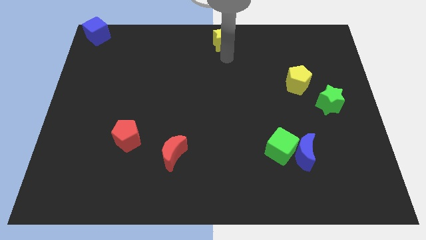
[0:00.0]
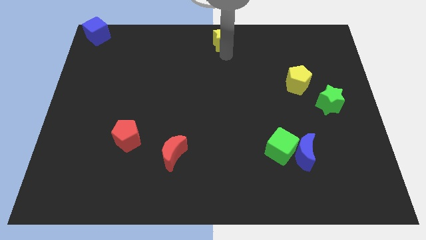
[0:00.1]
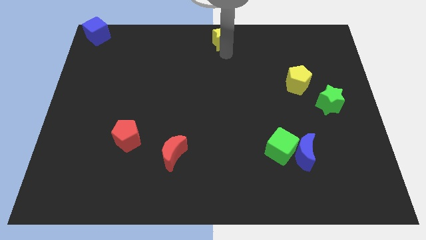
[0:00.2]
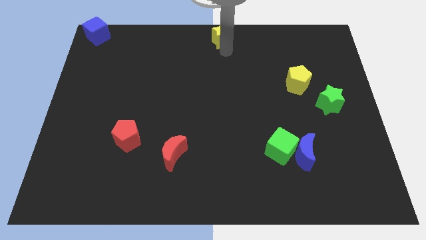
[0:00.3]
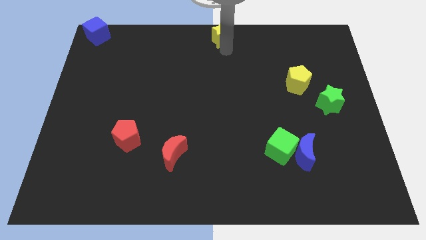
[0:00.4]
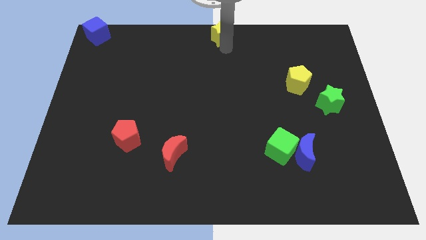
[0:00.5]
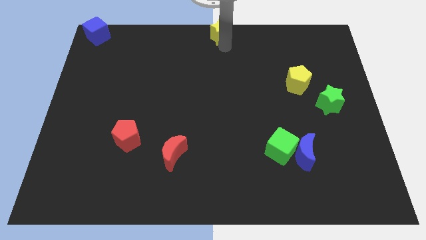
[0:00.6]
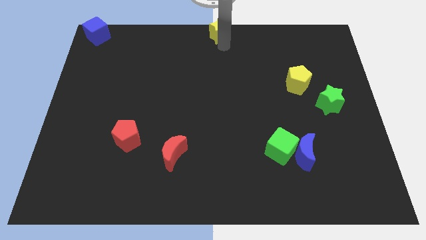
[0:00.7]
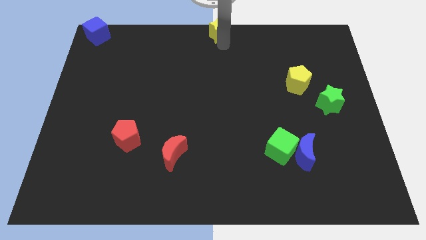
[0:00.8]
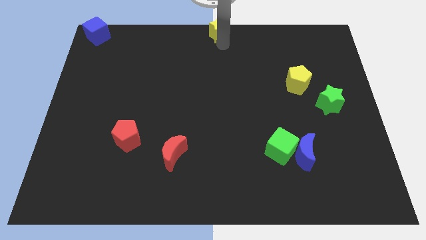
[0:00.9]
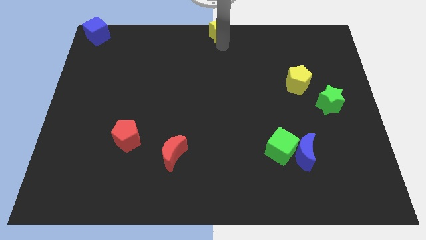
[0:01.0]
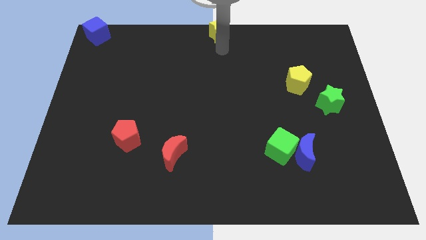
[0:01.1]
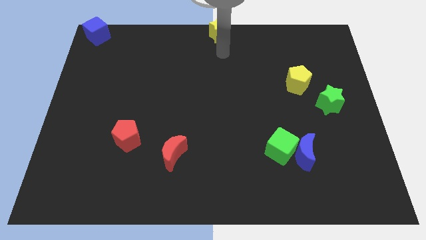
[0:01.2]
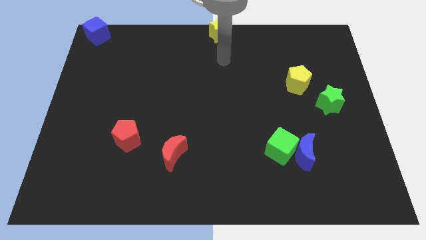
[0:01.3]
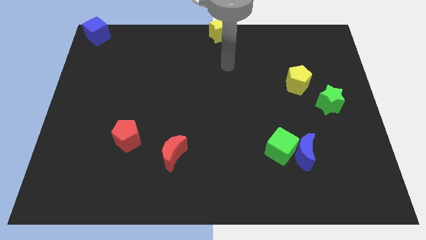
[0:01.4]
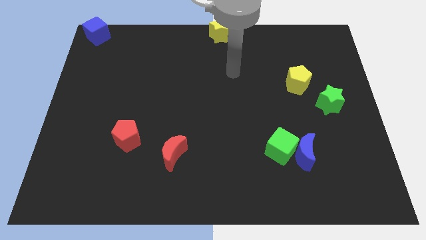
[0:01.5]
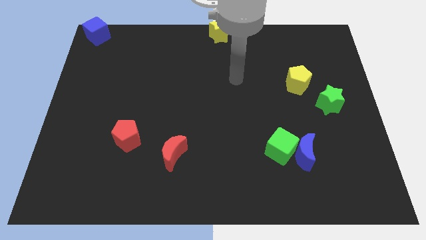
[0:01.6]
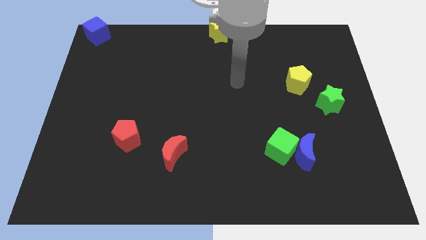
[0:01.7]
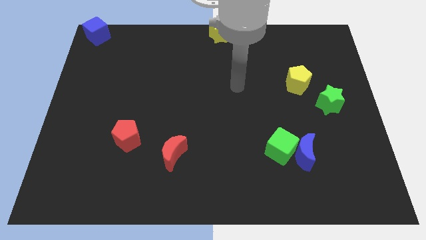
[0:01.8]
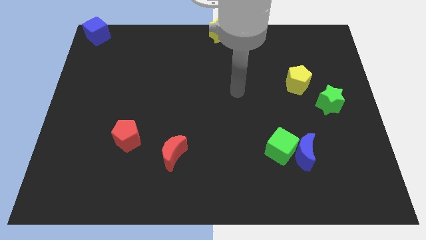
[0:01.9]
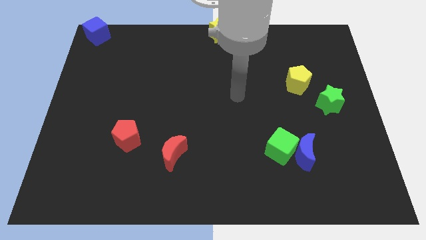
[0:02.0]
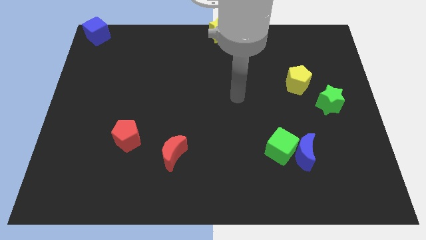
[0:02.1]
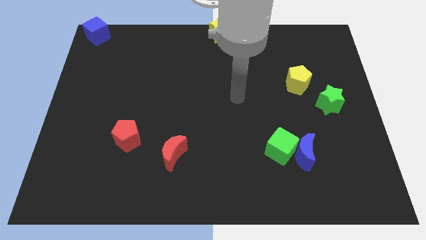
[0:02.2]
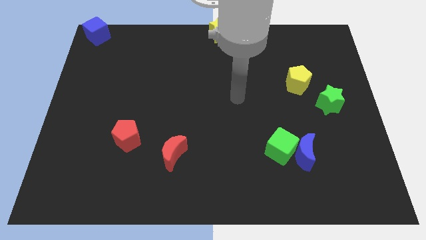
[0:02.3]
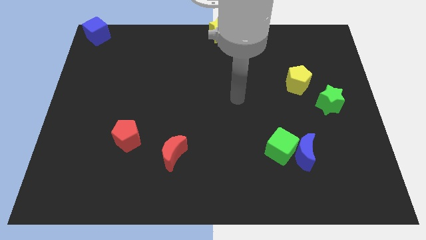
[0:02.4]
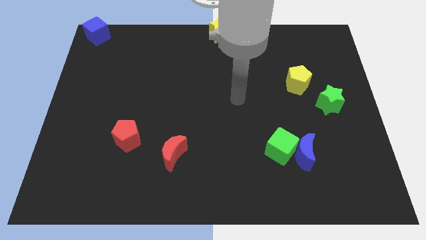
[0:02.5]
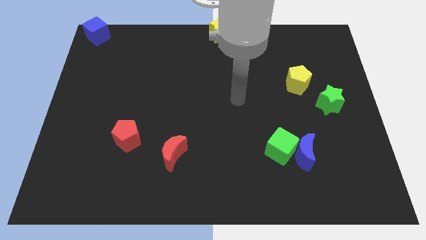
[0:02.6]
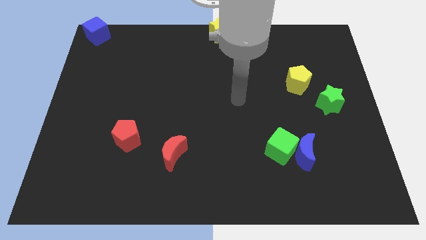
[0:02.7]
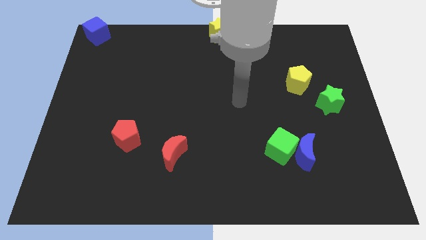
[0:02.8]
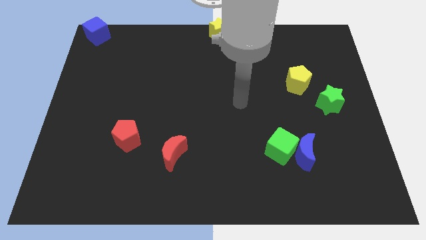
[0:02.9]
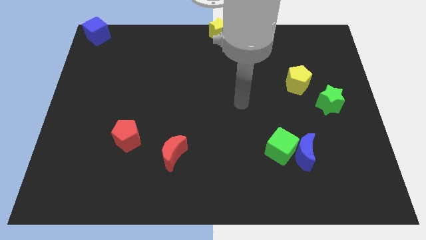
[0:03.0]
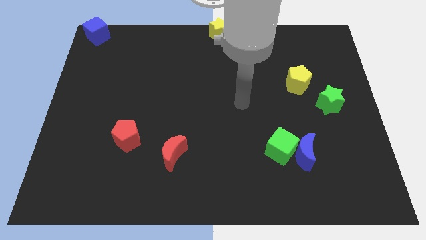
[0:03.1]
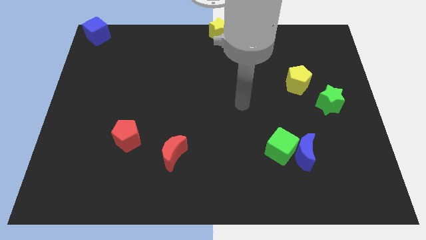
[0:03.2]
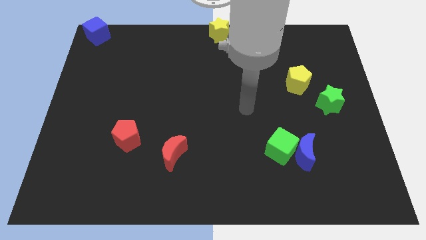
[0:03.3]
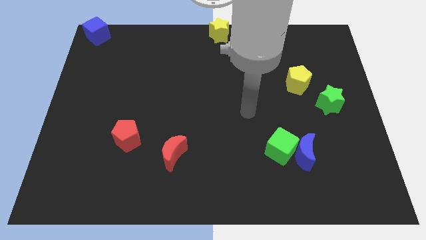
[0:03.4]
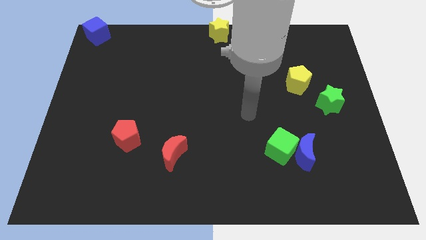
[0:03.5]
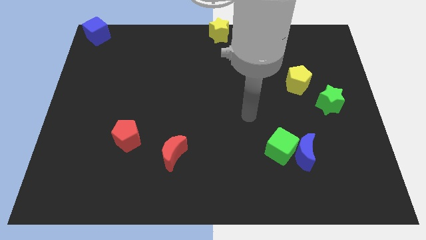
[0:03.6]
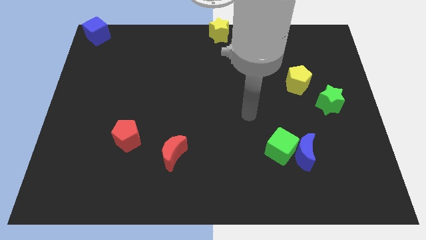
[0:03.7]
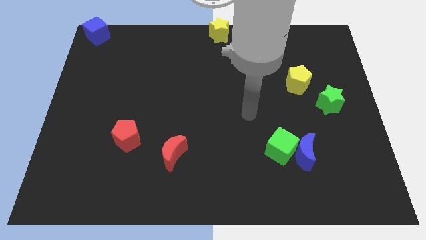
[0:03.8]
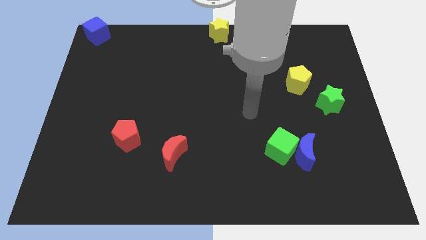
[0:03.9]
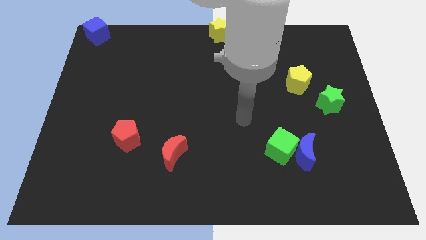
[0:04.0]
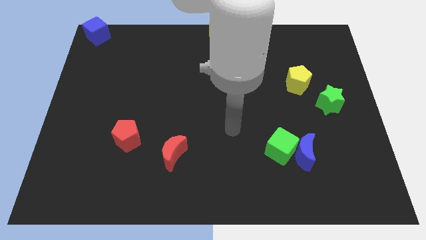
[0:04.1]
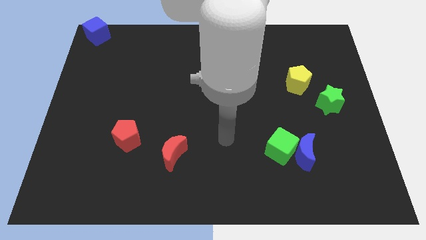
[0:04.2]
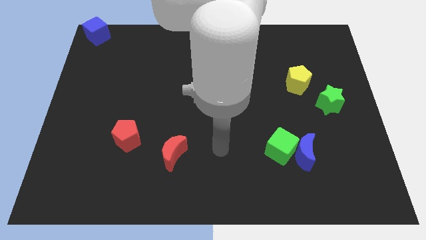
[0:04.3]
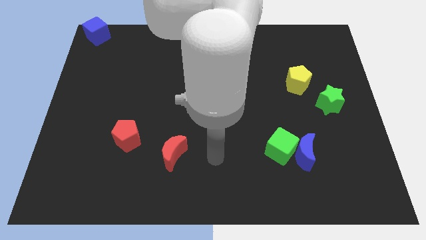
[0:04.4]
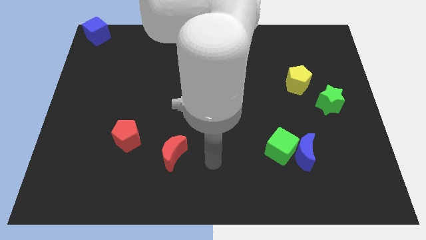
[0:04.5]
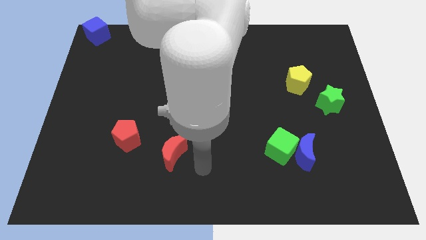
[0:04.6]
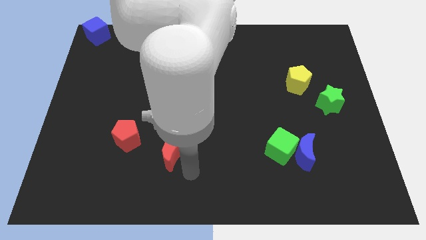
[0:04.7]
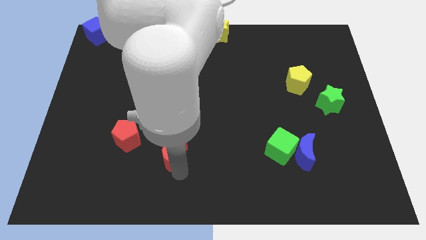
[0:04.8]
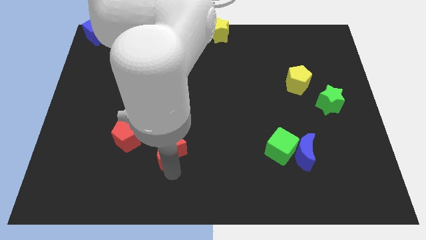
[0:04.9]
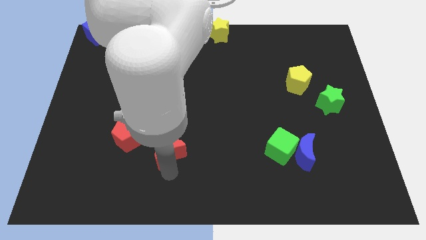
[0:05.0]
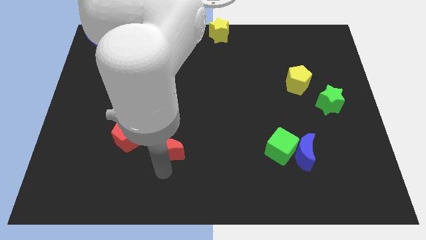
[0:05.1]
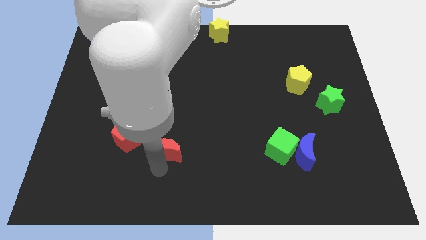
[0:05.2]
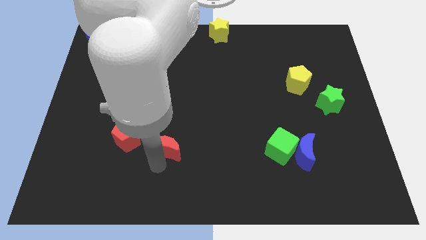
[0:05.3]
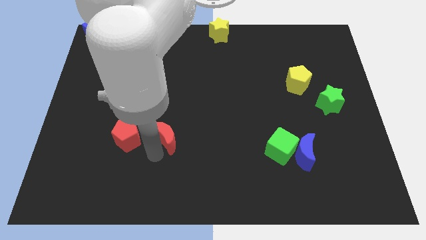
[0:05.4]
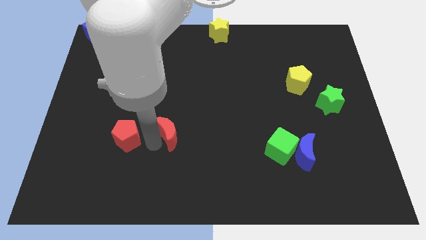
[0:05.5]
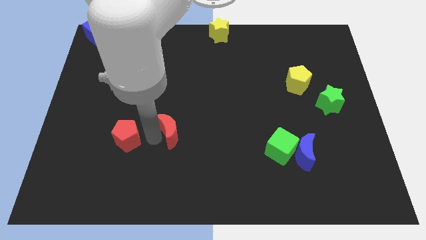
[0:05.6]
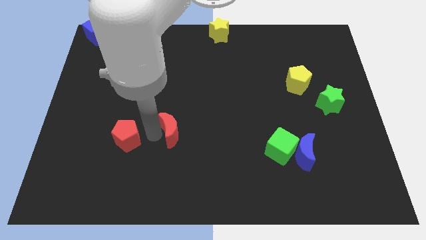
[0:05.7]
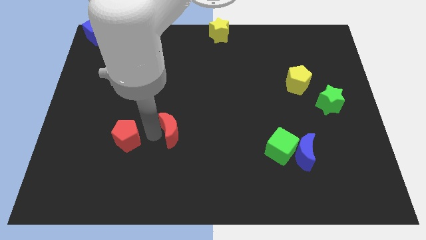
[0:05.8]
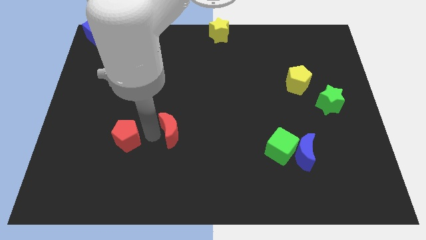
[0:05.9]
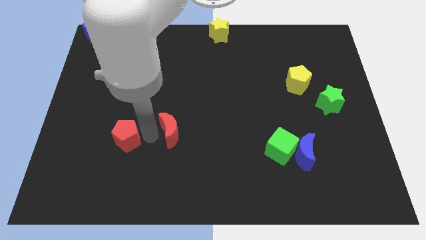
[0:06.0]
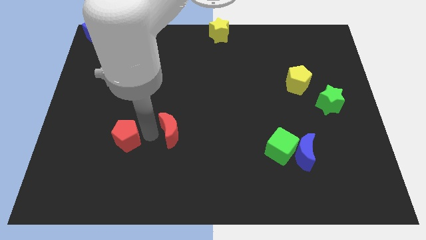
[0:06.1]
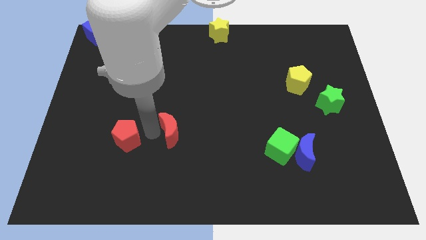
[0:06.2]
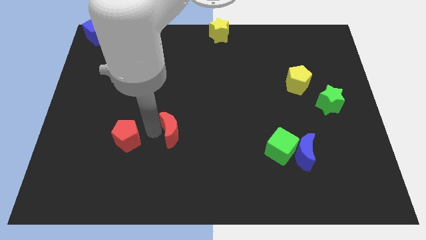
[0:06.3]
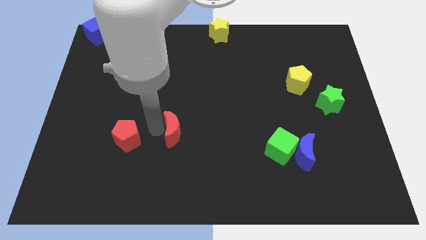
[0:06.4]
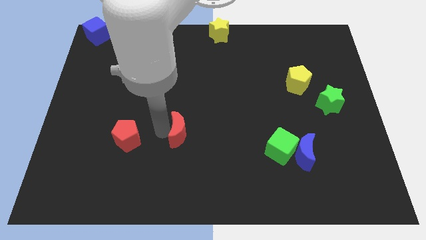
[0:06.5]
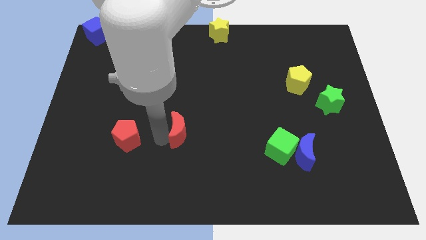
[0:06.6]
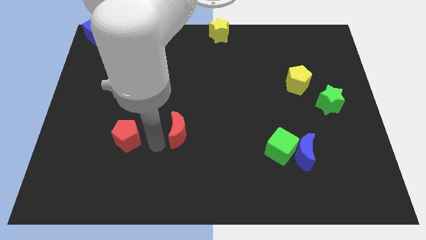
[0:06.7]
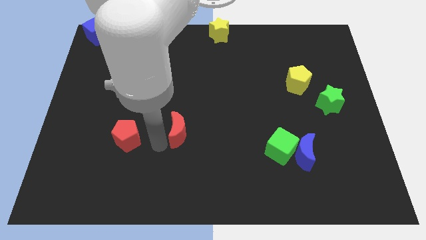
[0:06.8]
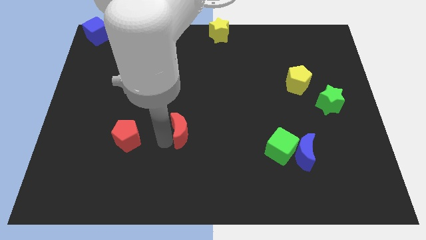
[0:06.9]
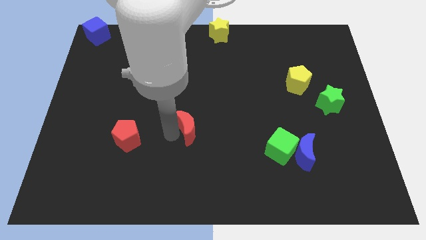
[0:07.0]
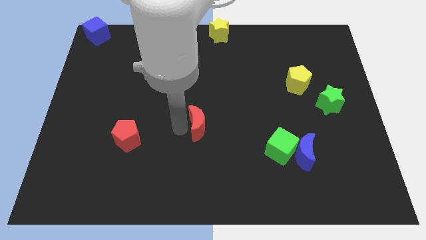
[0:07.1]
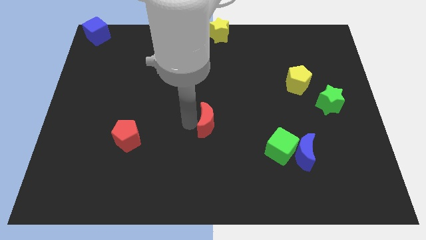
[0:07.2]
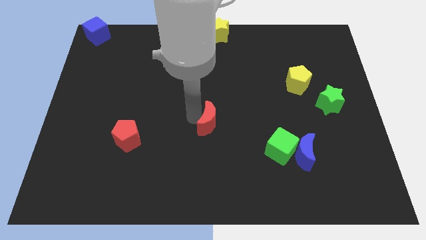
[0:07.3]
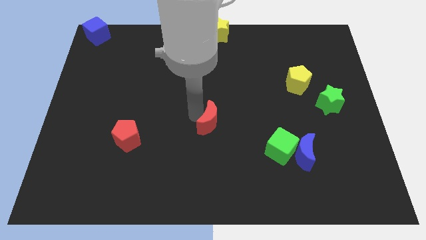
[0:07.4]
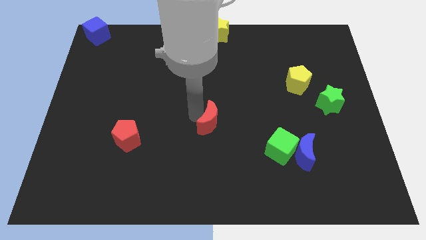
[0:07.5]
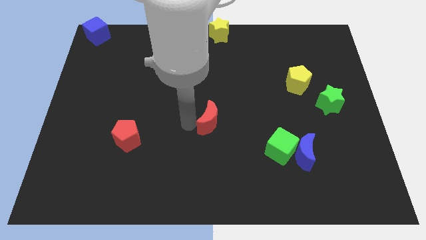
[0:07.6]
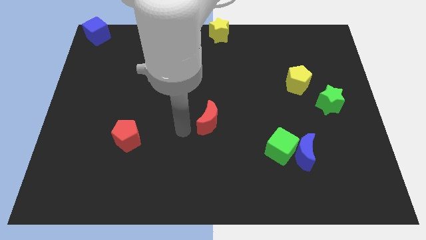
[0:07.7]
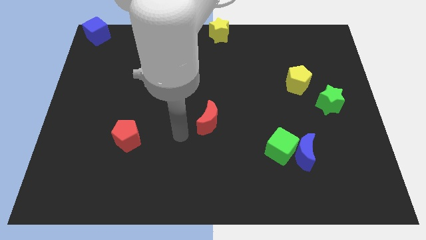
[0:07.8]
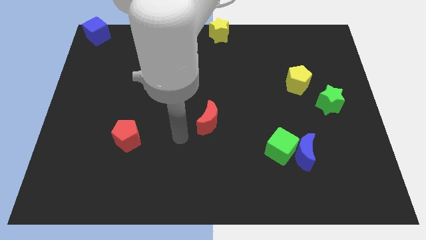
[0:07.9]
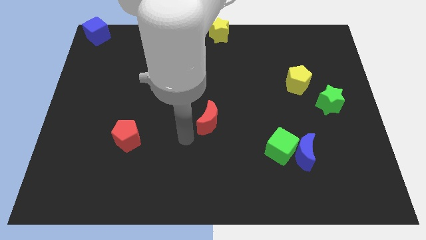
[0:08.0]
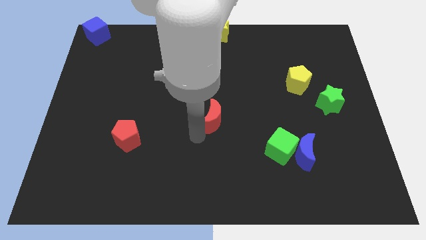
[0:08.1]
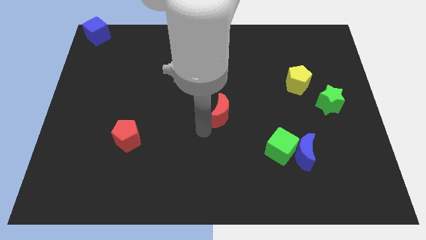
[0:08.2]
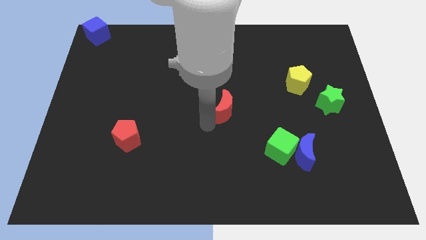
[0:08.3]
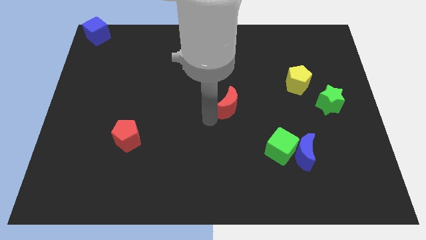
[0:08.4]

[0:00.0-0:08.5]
push the red crescent to the center

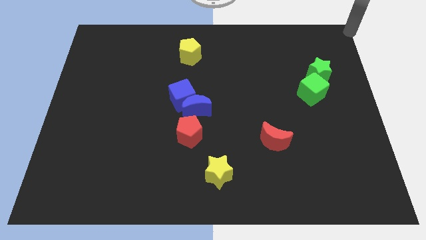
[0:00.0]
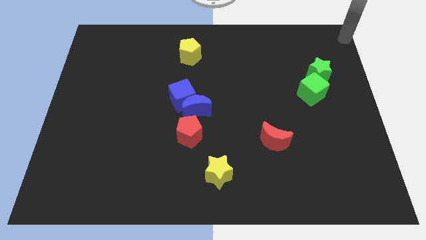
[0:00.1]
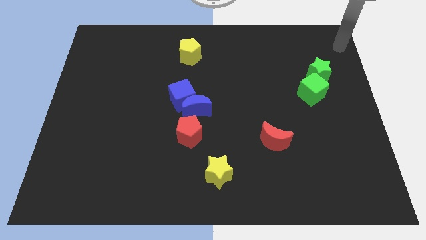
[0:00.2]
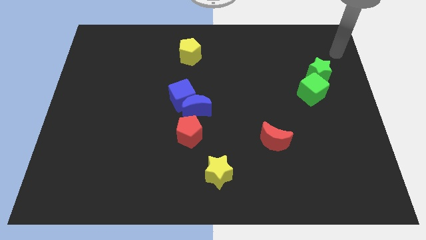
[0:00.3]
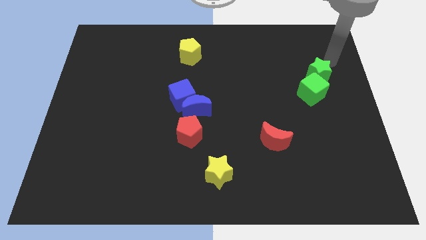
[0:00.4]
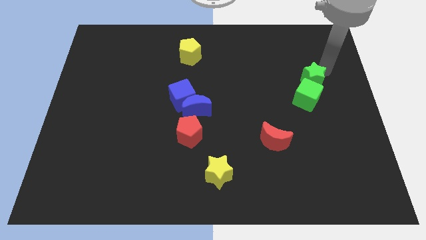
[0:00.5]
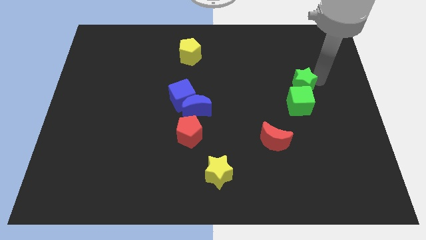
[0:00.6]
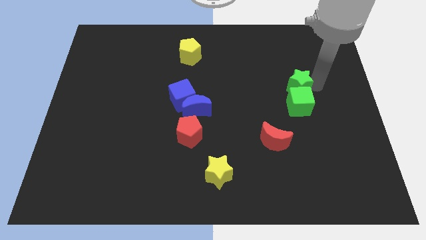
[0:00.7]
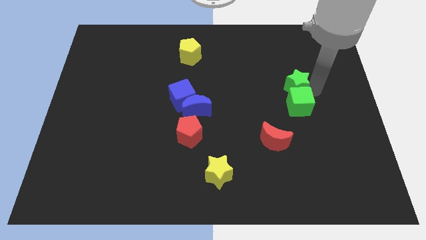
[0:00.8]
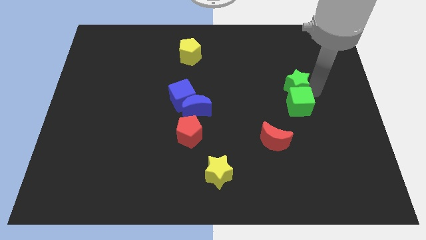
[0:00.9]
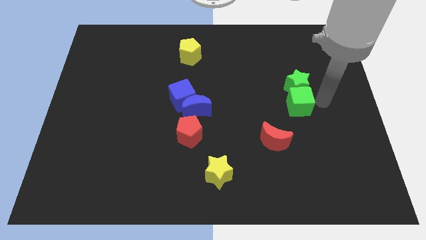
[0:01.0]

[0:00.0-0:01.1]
push the group of green blocks towards the red crescent
